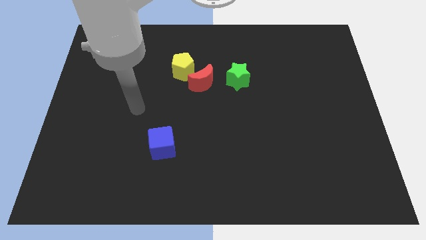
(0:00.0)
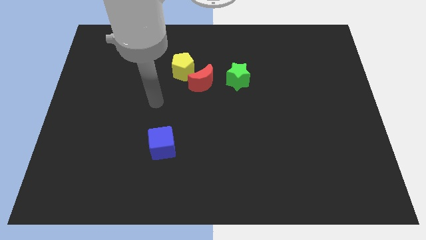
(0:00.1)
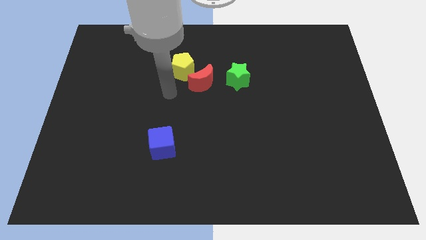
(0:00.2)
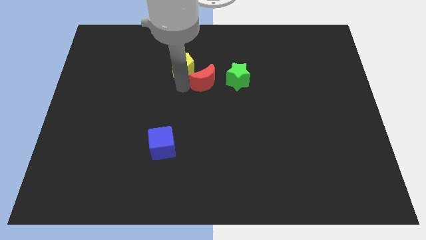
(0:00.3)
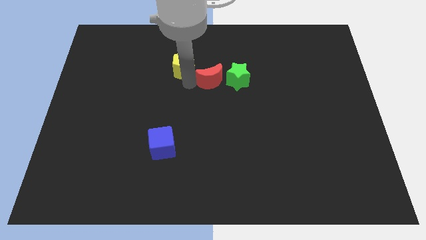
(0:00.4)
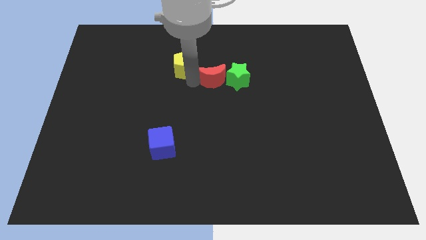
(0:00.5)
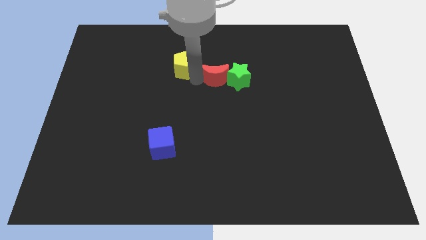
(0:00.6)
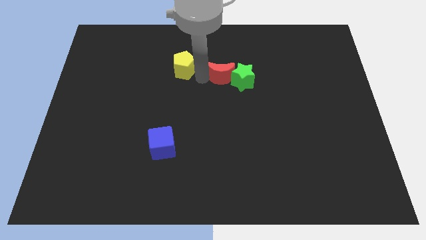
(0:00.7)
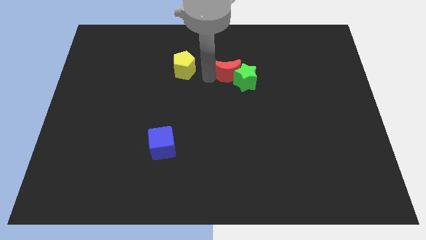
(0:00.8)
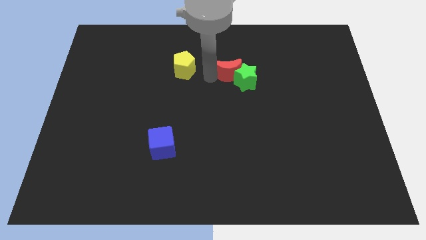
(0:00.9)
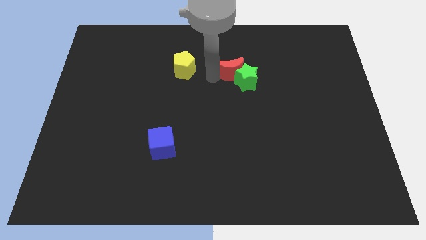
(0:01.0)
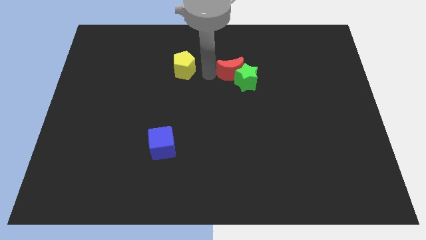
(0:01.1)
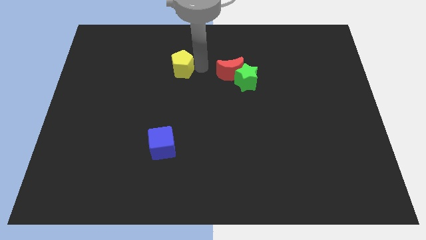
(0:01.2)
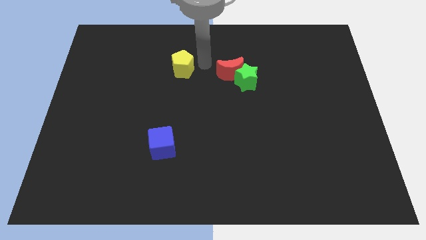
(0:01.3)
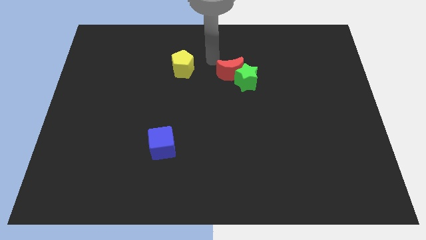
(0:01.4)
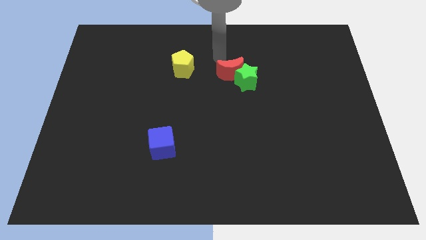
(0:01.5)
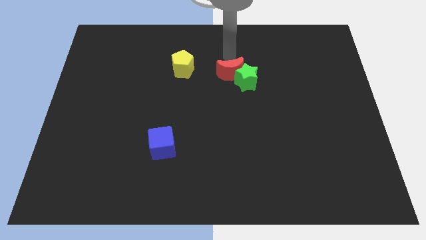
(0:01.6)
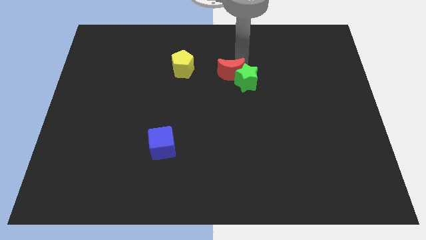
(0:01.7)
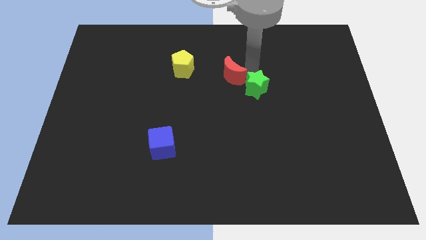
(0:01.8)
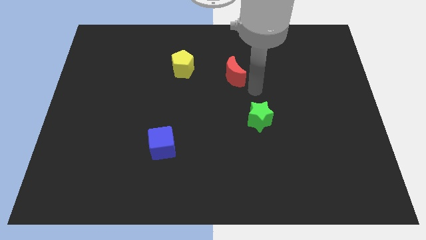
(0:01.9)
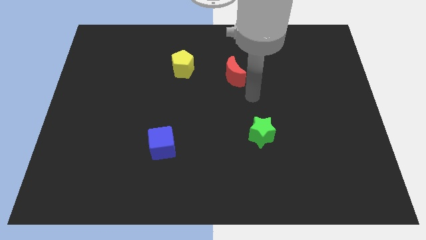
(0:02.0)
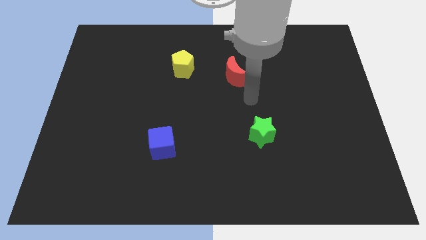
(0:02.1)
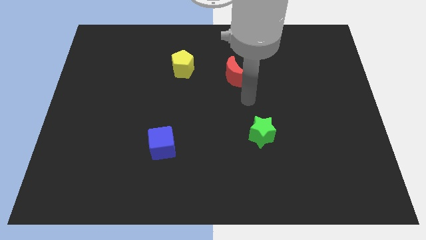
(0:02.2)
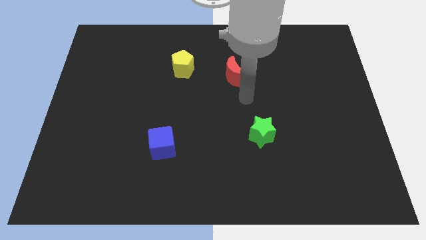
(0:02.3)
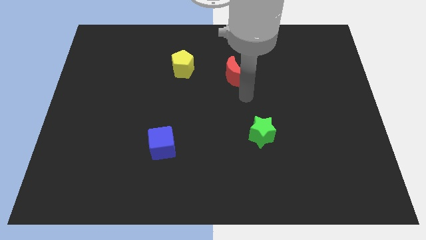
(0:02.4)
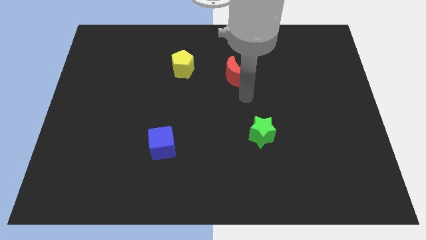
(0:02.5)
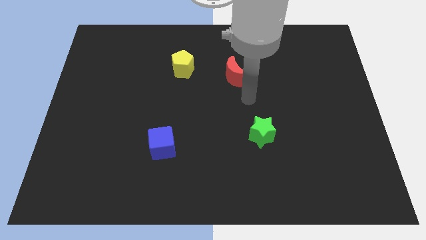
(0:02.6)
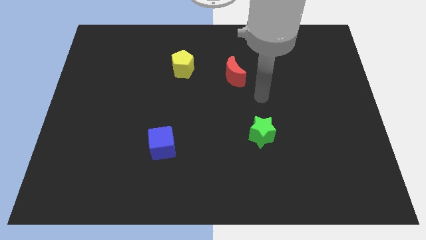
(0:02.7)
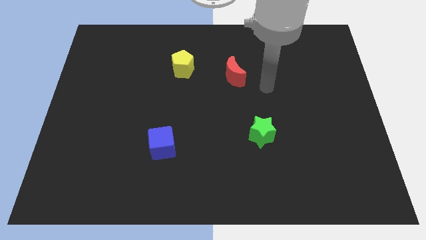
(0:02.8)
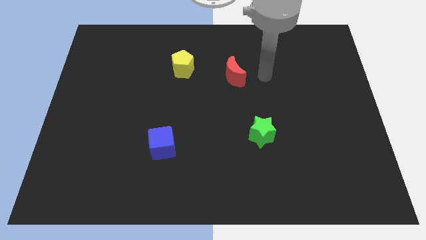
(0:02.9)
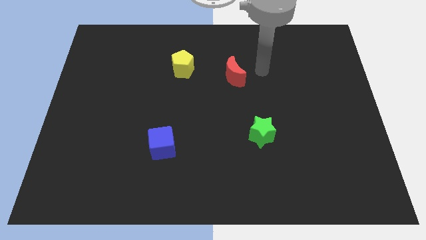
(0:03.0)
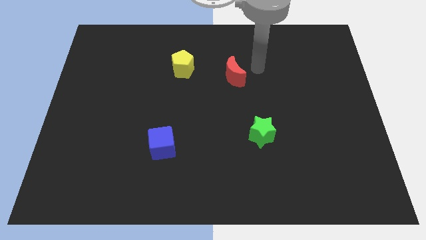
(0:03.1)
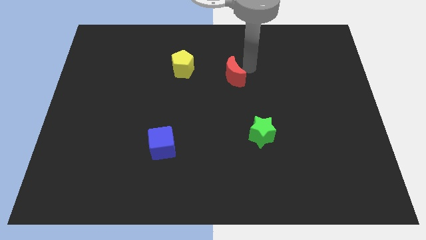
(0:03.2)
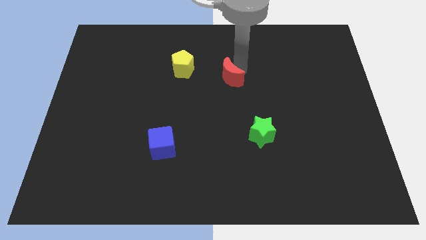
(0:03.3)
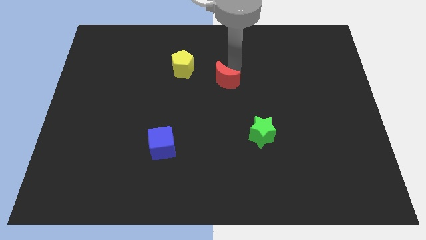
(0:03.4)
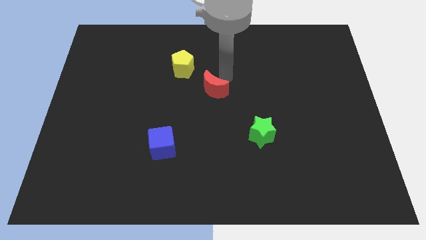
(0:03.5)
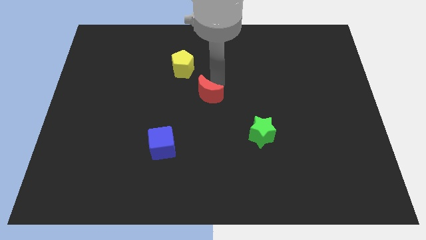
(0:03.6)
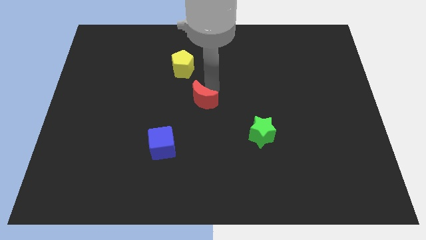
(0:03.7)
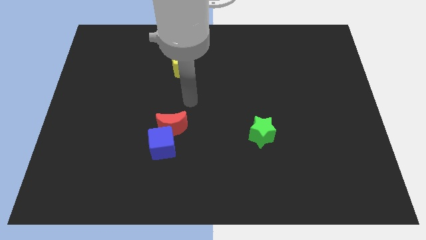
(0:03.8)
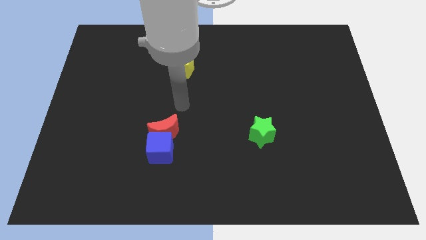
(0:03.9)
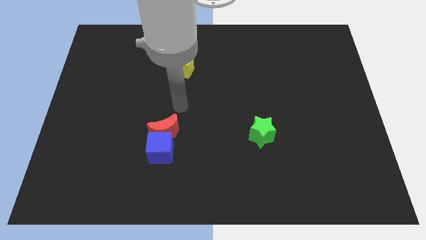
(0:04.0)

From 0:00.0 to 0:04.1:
push the moon close to the blue cube

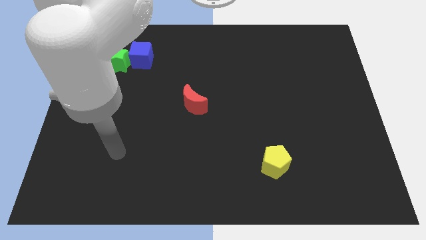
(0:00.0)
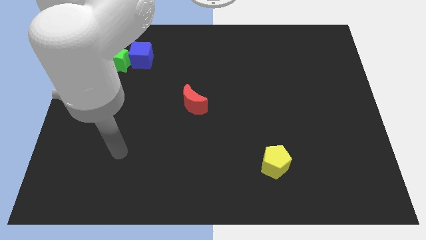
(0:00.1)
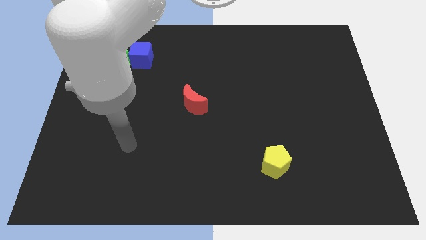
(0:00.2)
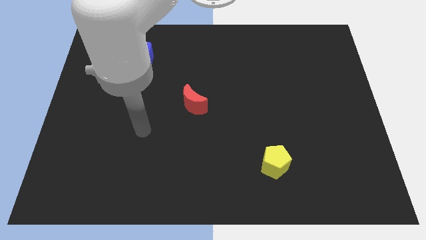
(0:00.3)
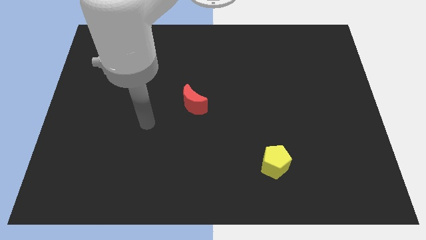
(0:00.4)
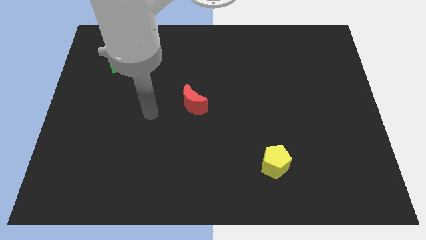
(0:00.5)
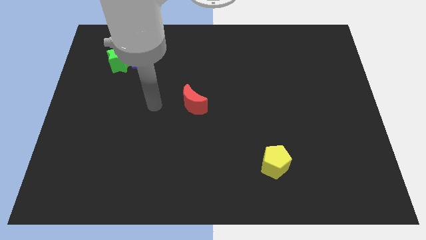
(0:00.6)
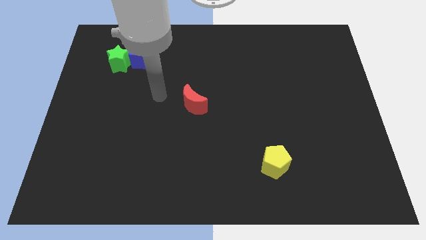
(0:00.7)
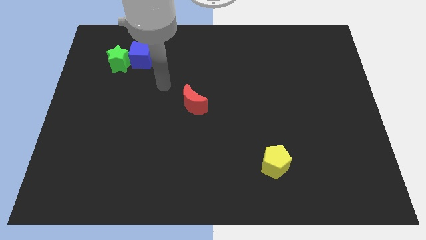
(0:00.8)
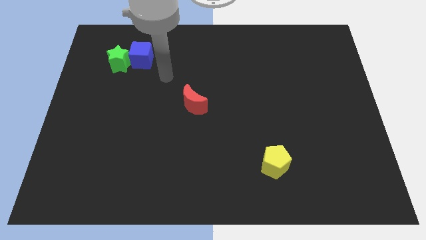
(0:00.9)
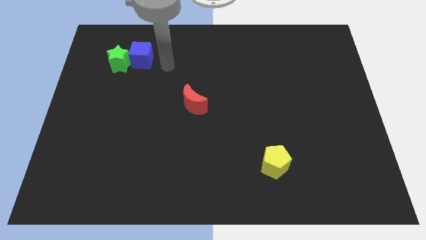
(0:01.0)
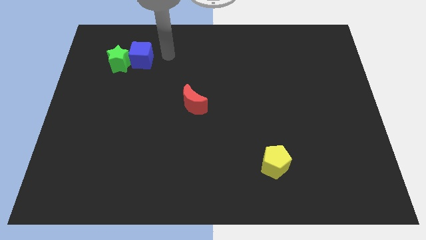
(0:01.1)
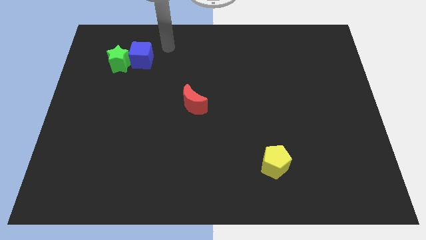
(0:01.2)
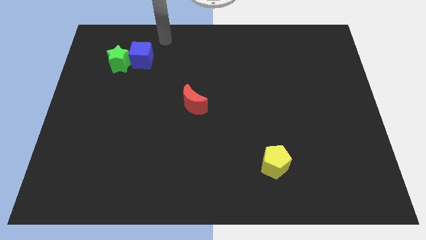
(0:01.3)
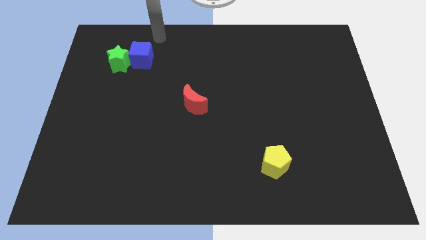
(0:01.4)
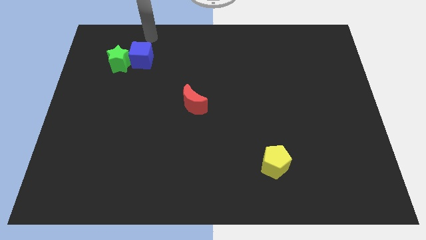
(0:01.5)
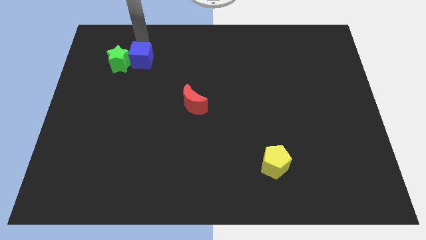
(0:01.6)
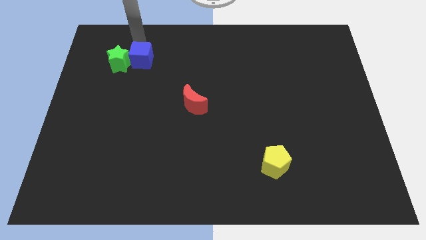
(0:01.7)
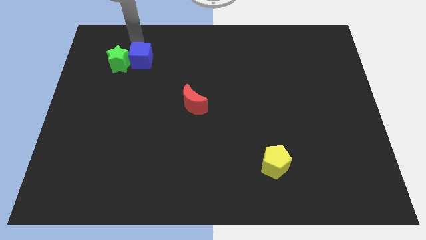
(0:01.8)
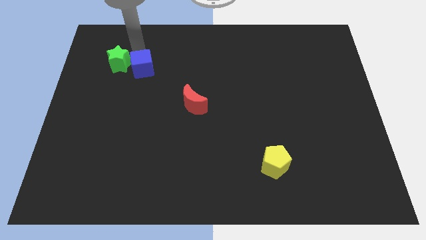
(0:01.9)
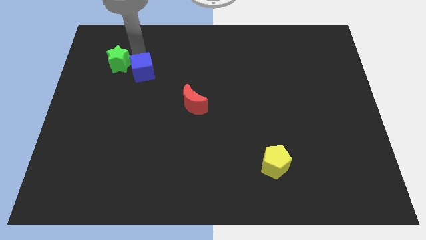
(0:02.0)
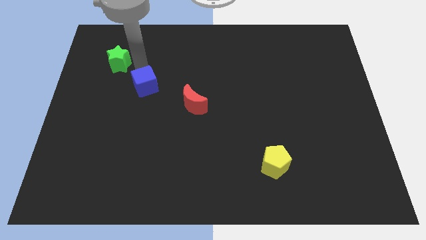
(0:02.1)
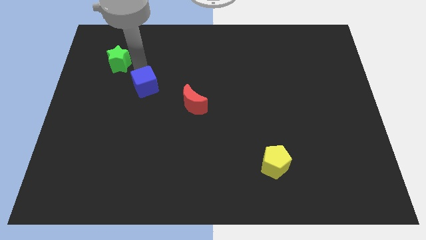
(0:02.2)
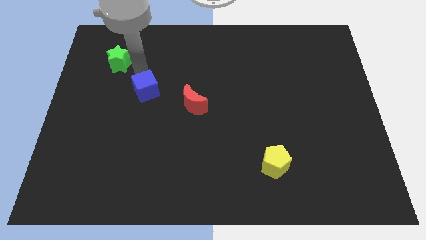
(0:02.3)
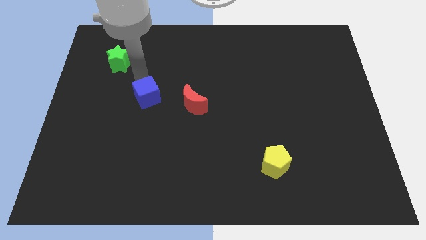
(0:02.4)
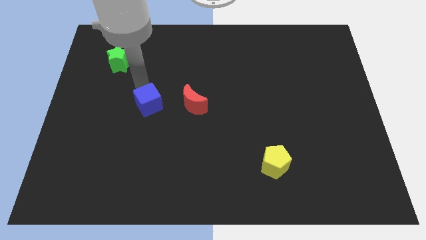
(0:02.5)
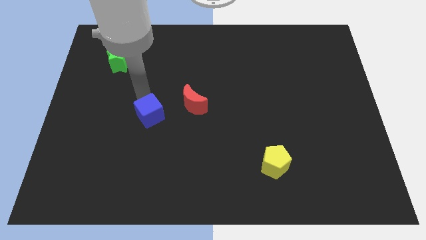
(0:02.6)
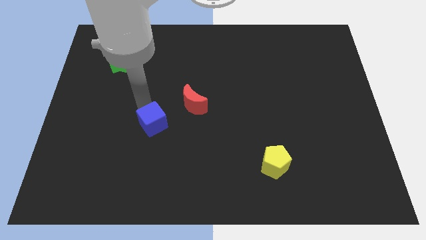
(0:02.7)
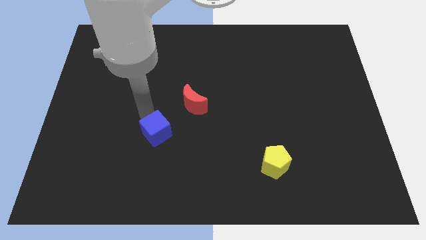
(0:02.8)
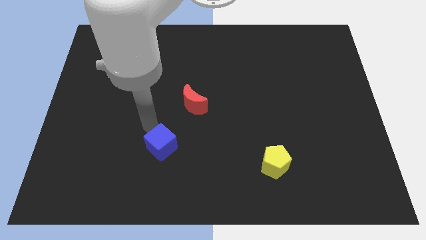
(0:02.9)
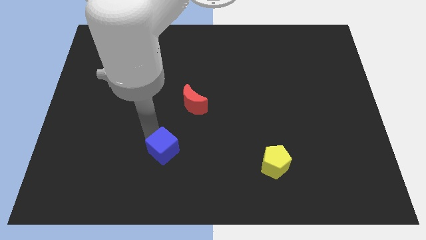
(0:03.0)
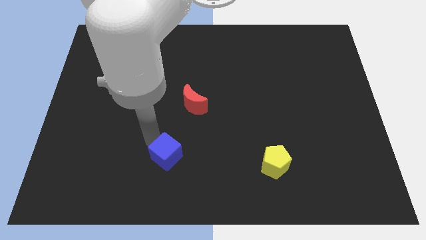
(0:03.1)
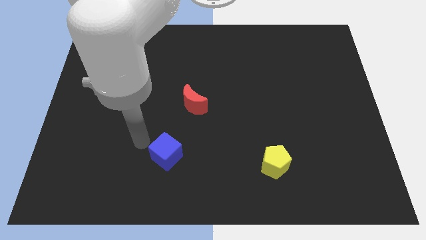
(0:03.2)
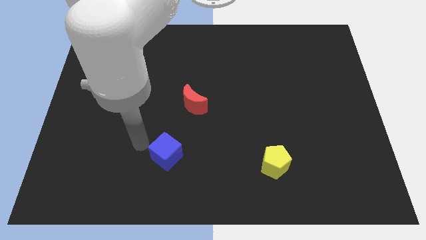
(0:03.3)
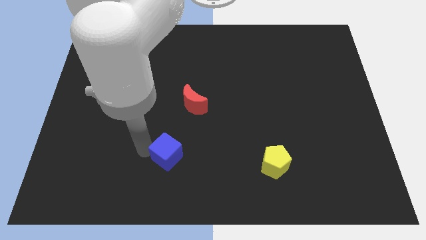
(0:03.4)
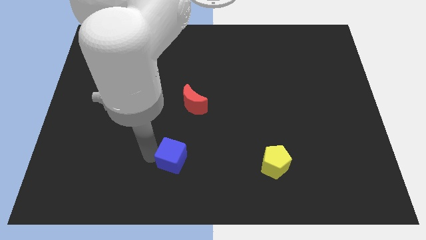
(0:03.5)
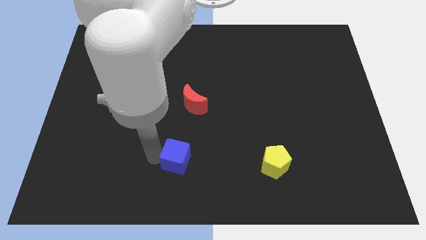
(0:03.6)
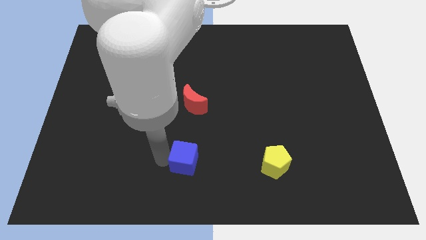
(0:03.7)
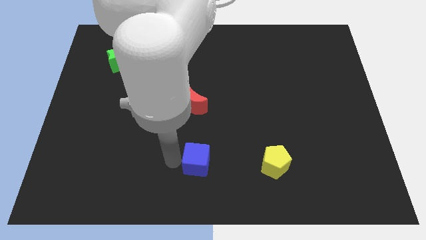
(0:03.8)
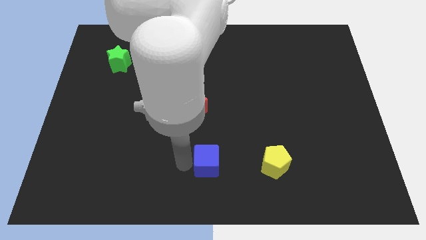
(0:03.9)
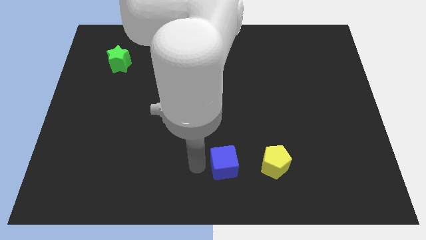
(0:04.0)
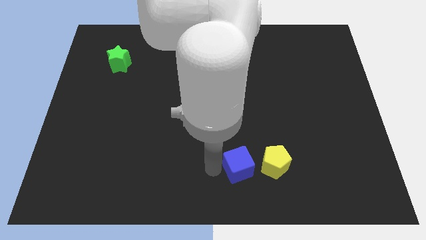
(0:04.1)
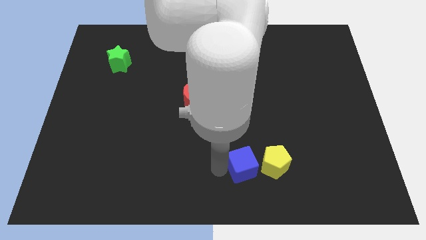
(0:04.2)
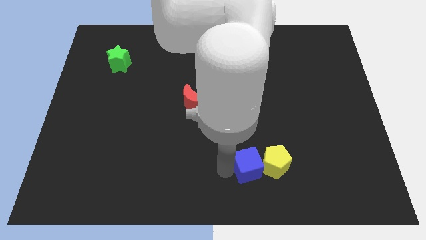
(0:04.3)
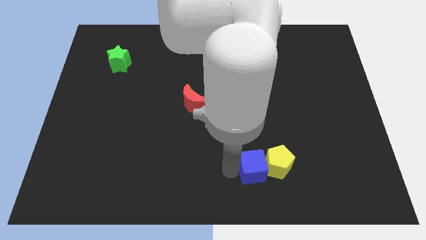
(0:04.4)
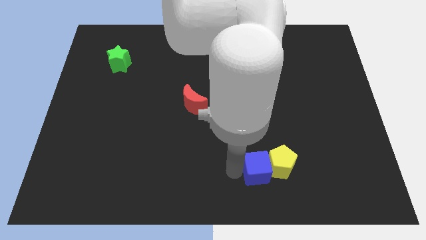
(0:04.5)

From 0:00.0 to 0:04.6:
put the cube to the yellow pentagon
